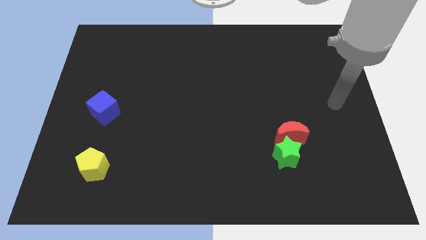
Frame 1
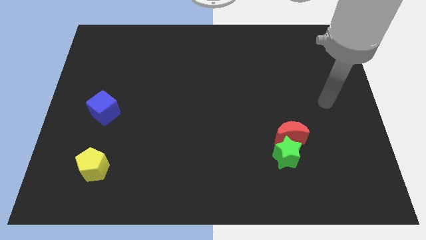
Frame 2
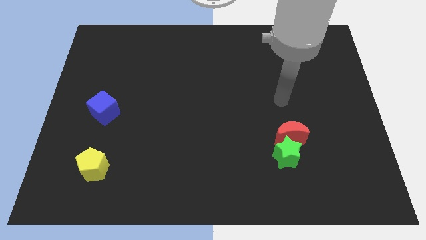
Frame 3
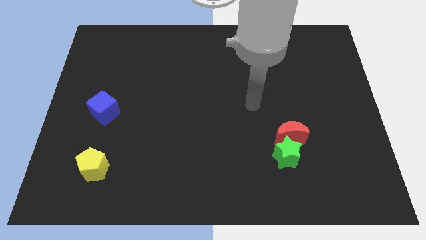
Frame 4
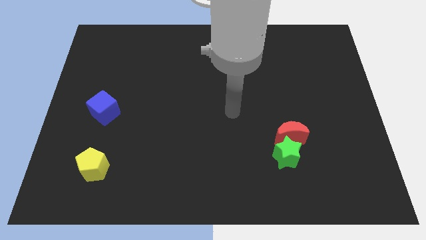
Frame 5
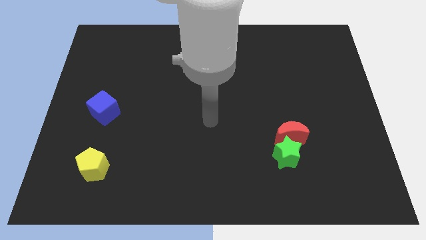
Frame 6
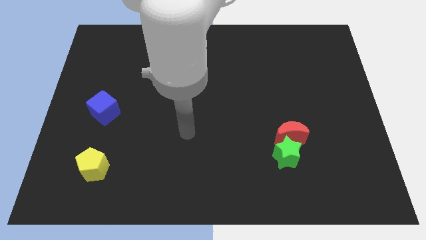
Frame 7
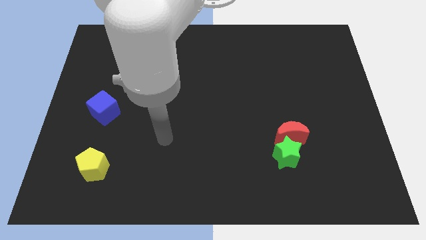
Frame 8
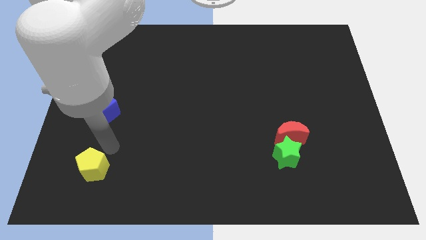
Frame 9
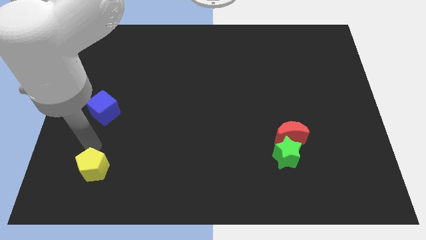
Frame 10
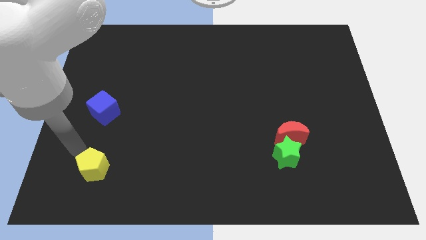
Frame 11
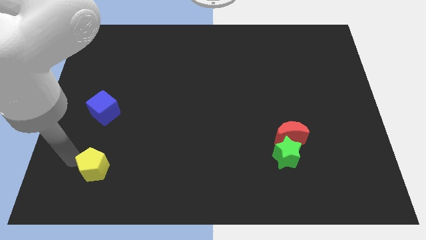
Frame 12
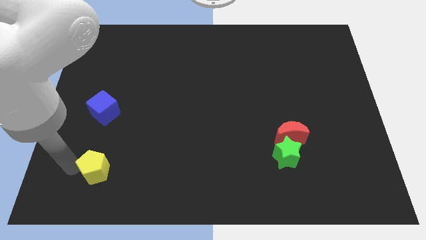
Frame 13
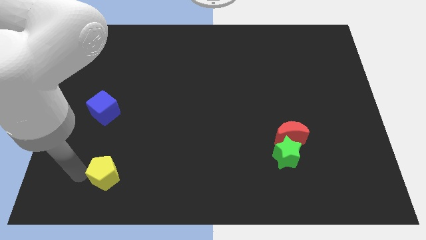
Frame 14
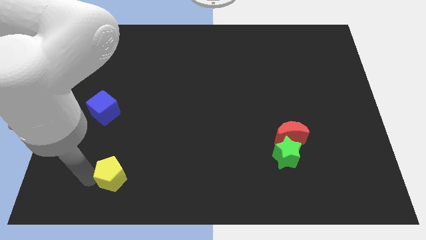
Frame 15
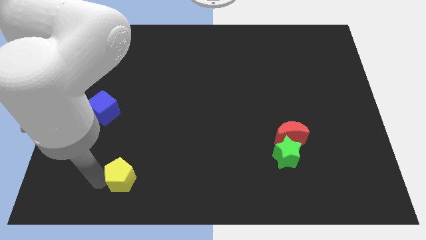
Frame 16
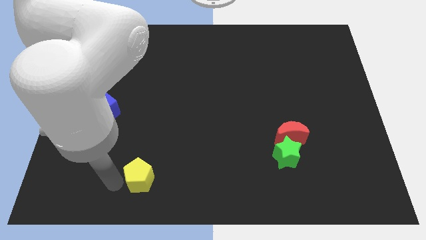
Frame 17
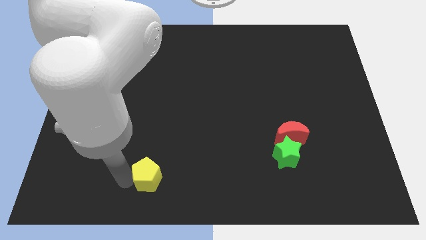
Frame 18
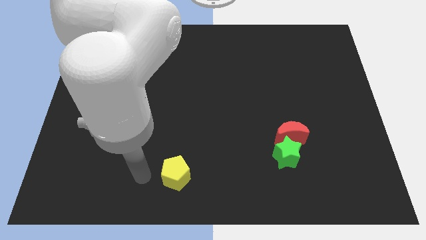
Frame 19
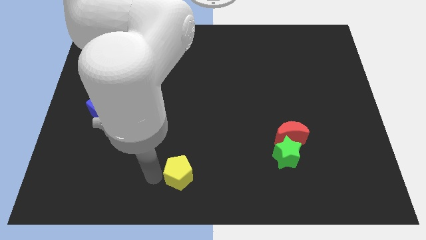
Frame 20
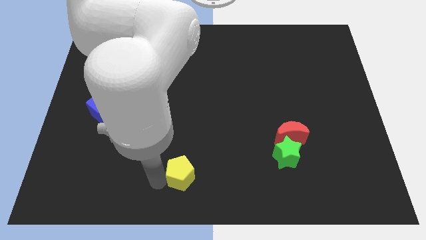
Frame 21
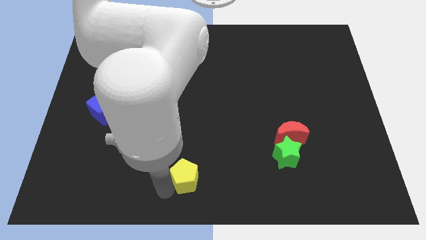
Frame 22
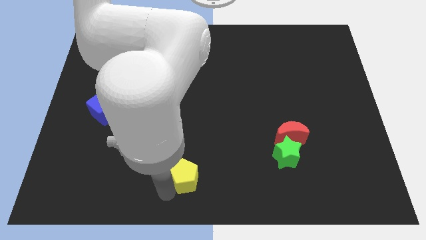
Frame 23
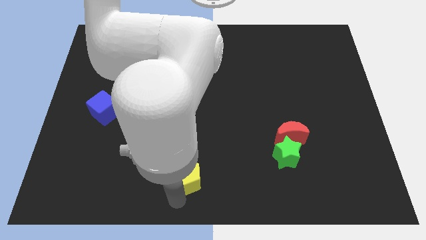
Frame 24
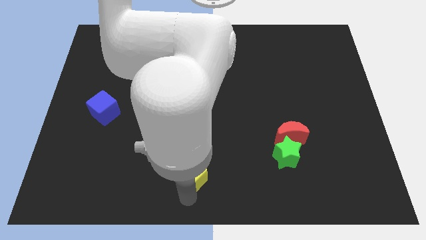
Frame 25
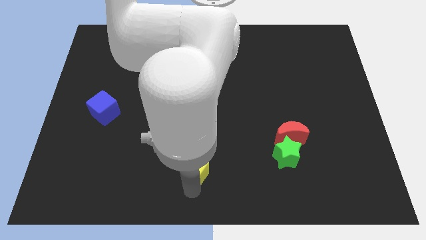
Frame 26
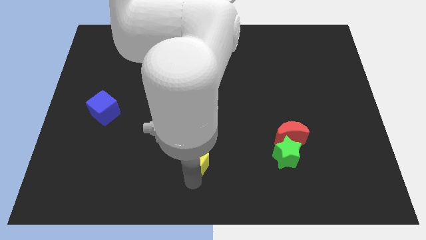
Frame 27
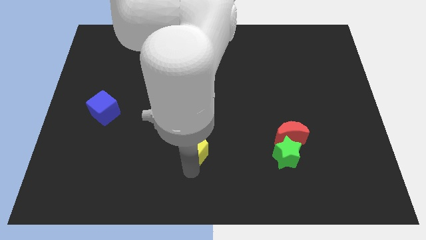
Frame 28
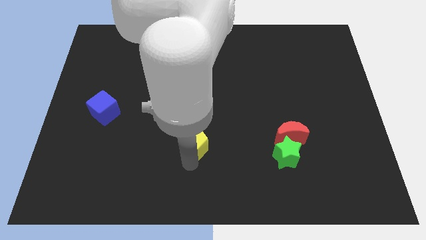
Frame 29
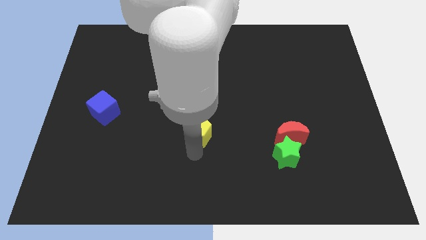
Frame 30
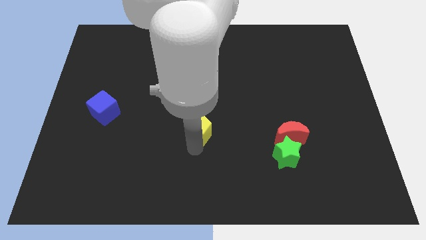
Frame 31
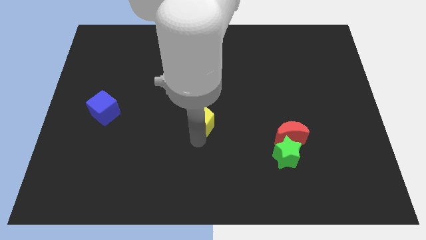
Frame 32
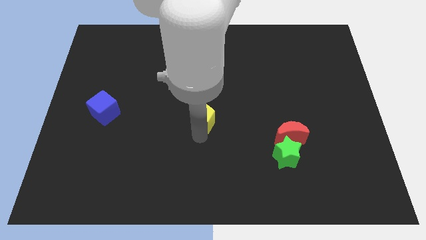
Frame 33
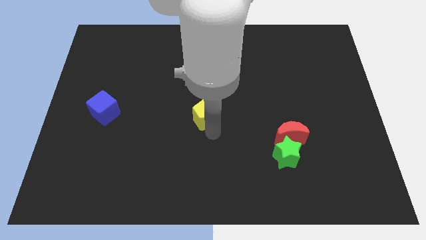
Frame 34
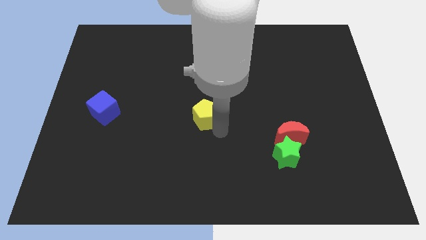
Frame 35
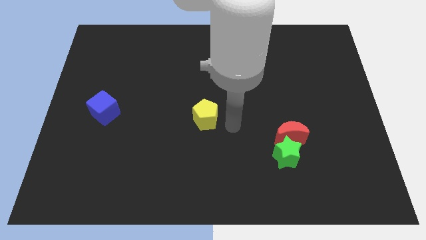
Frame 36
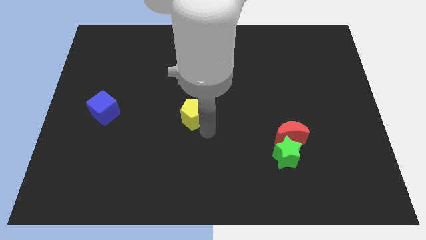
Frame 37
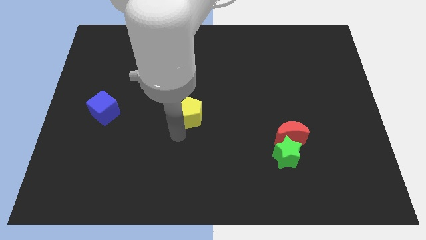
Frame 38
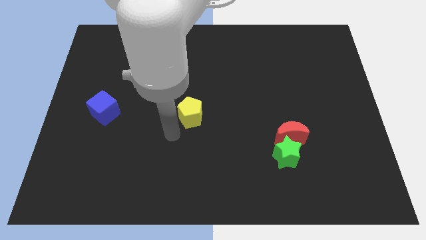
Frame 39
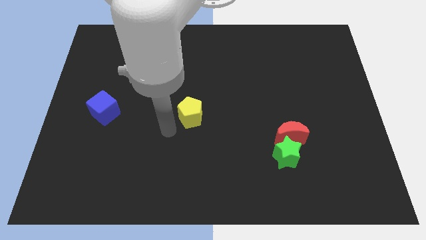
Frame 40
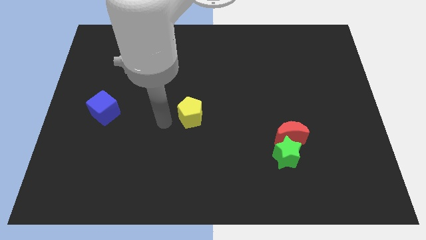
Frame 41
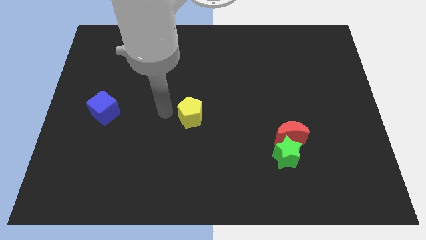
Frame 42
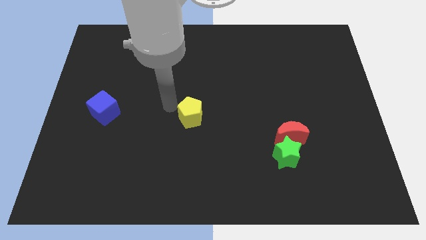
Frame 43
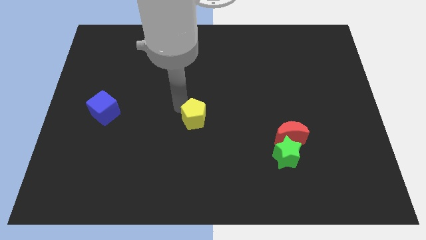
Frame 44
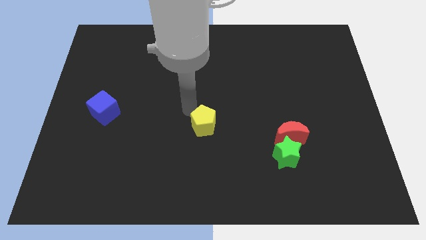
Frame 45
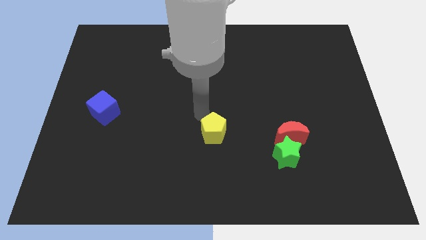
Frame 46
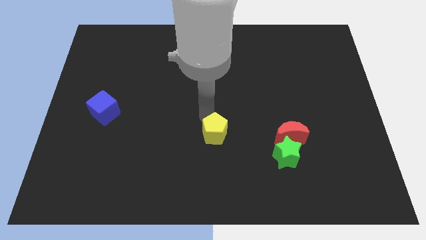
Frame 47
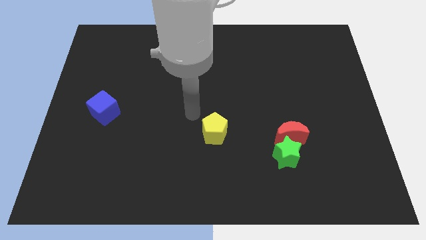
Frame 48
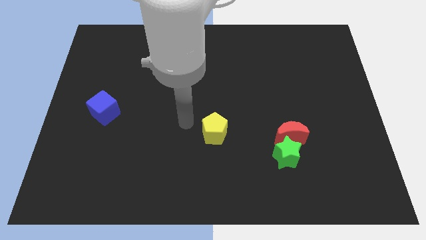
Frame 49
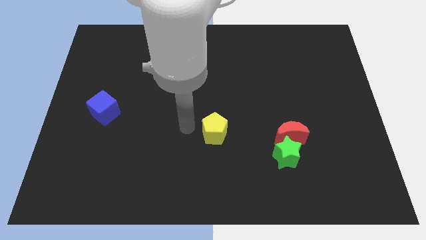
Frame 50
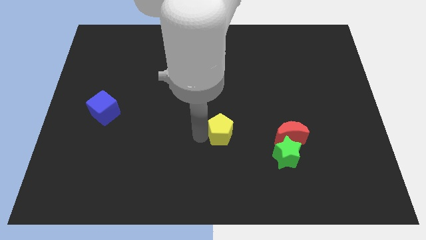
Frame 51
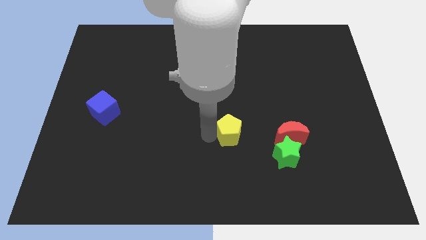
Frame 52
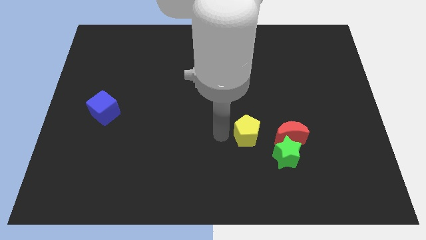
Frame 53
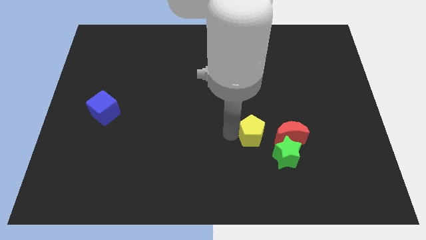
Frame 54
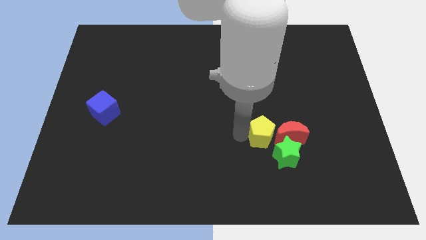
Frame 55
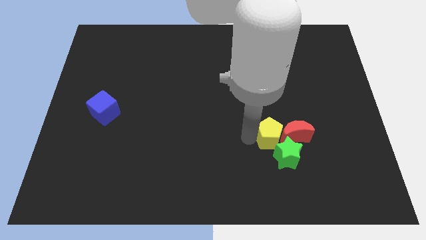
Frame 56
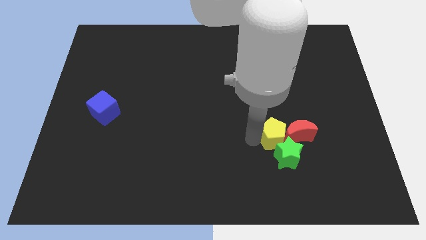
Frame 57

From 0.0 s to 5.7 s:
put the pentagon close to the red moon

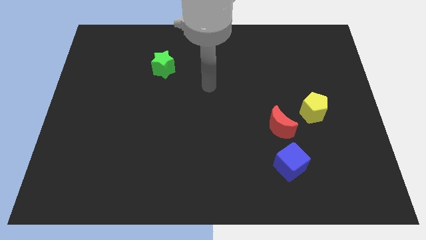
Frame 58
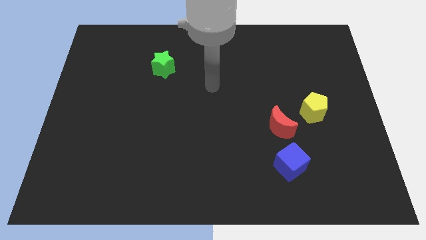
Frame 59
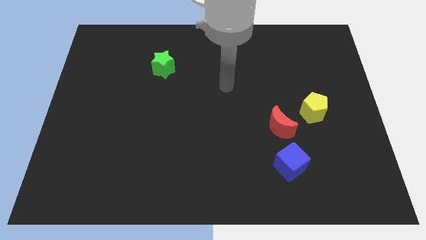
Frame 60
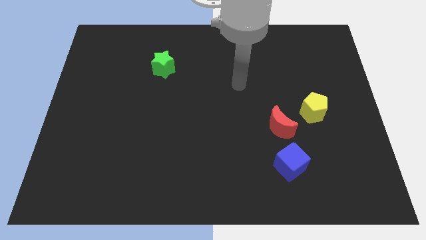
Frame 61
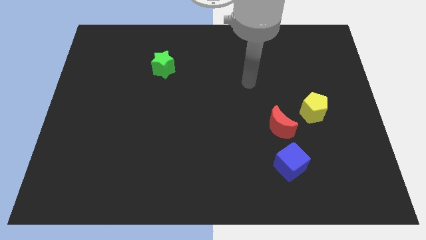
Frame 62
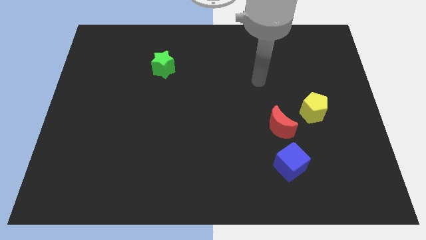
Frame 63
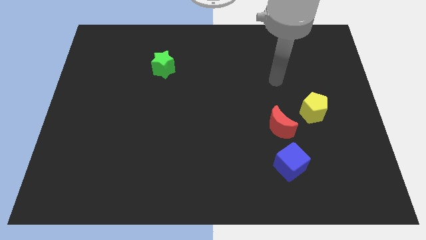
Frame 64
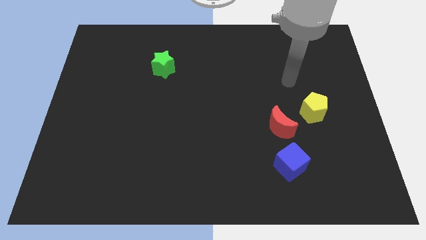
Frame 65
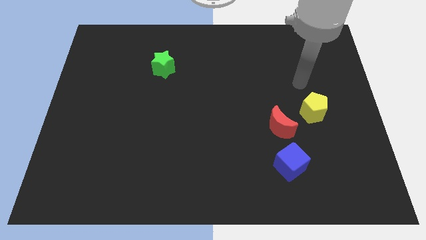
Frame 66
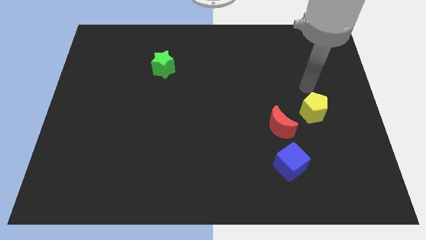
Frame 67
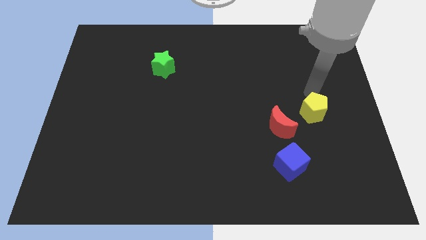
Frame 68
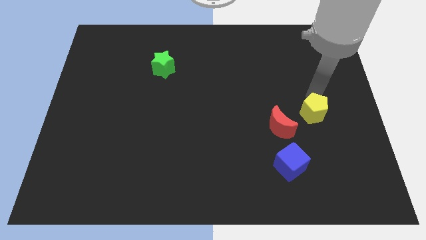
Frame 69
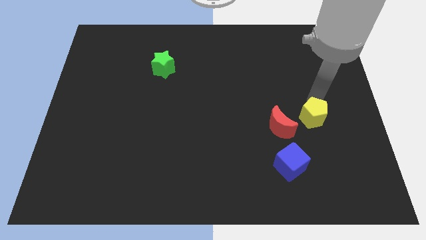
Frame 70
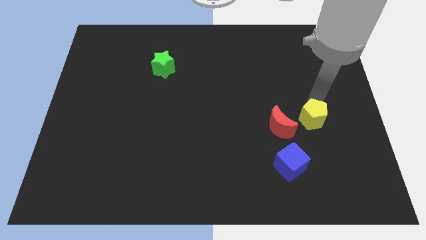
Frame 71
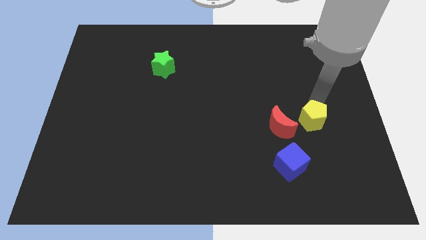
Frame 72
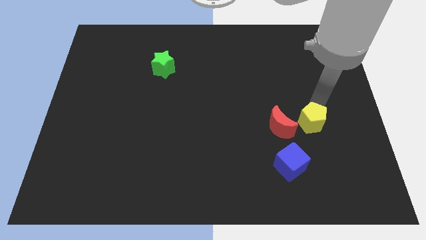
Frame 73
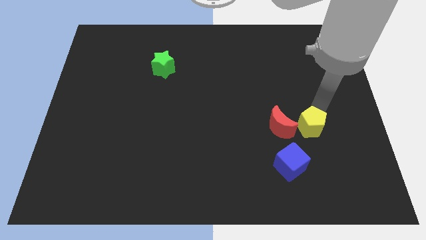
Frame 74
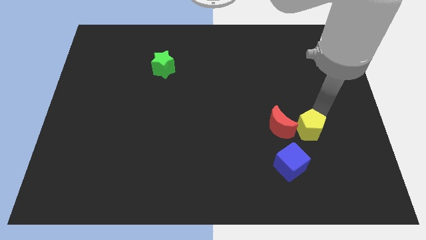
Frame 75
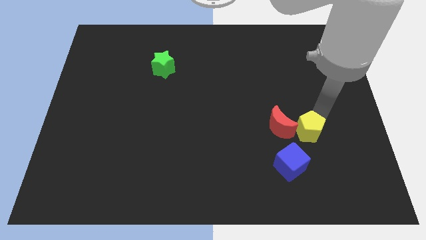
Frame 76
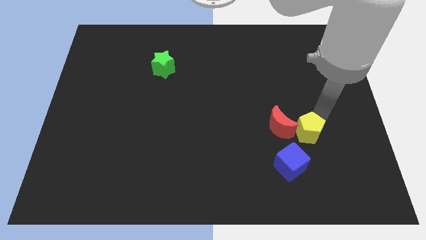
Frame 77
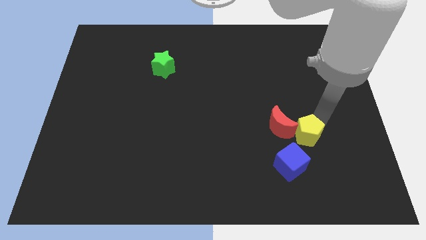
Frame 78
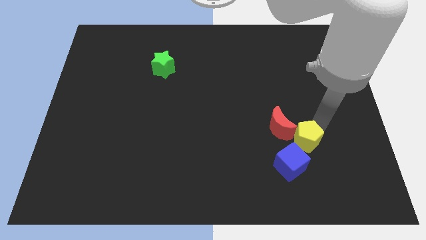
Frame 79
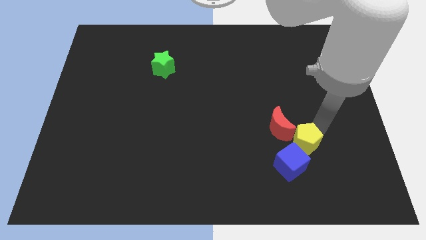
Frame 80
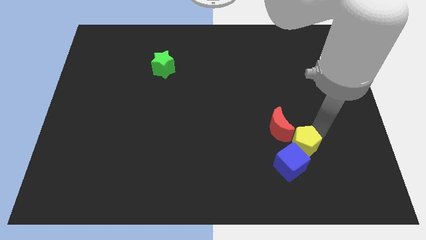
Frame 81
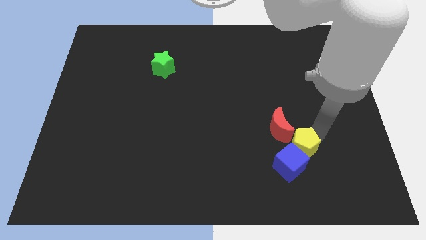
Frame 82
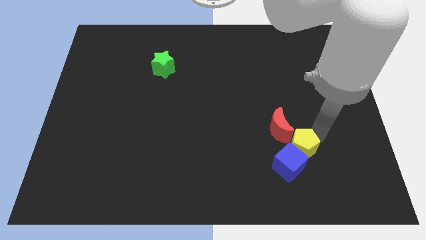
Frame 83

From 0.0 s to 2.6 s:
move the pentagon close to the cube

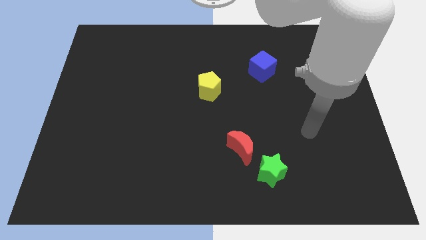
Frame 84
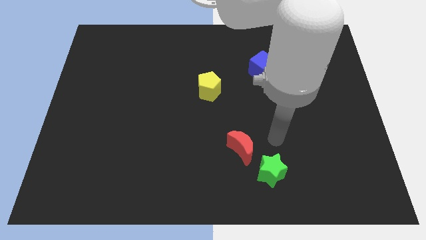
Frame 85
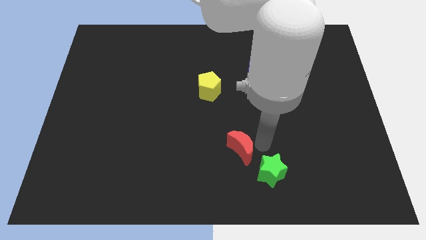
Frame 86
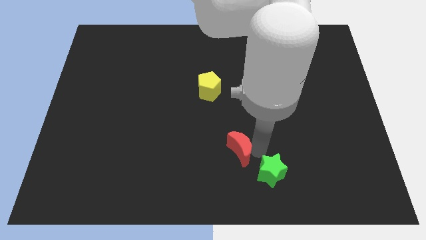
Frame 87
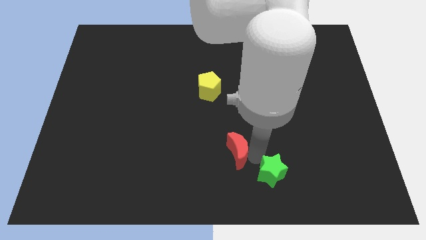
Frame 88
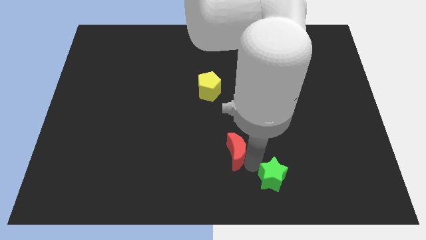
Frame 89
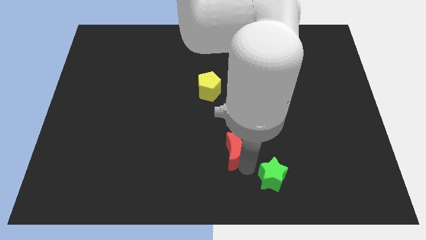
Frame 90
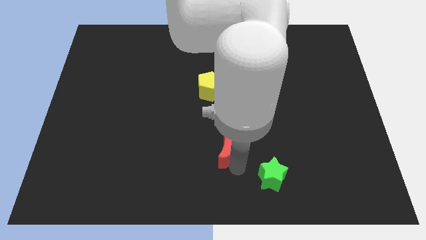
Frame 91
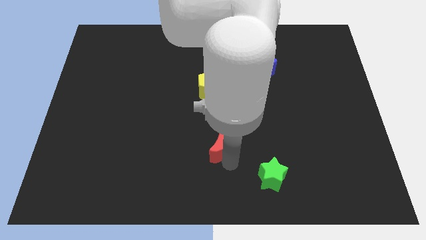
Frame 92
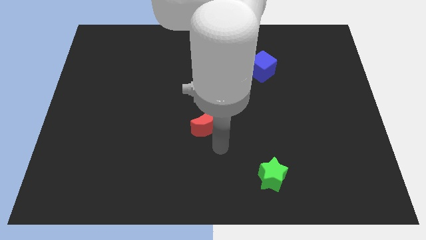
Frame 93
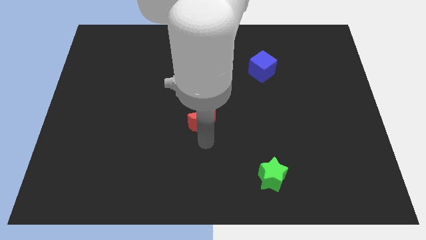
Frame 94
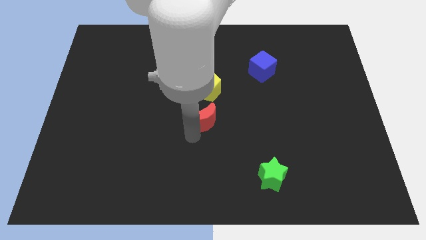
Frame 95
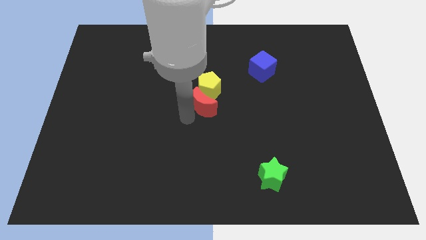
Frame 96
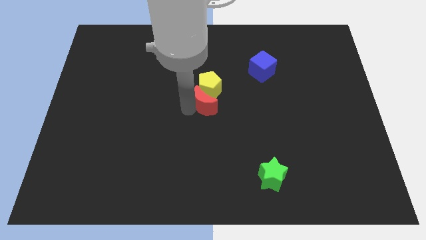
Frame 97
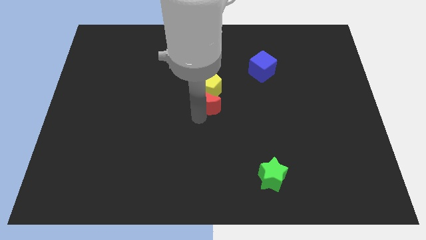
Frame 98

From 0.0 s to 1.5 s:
push the moon to the pentagon
